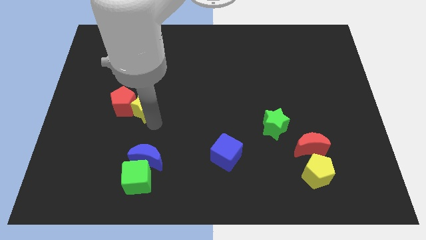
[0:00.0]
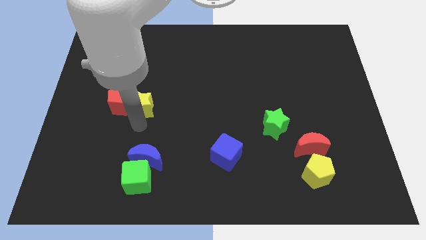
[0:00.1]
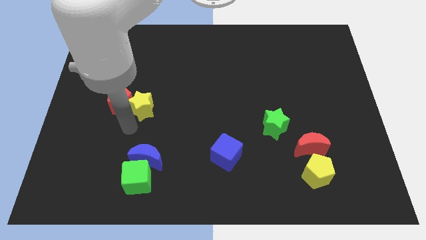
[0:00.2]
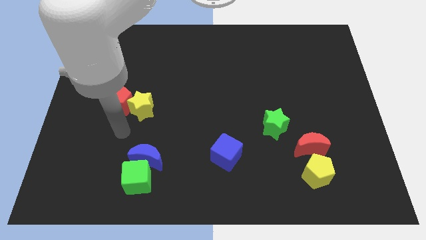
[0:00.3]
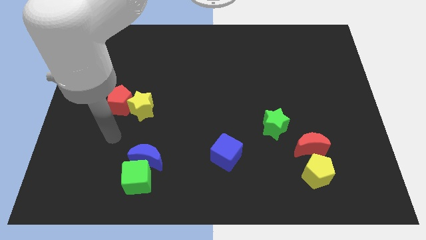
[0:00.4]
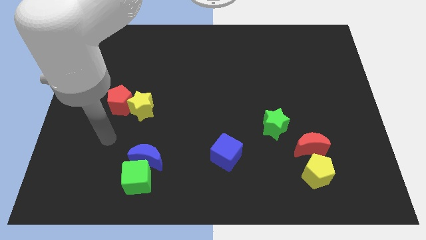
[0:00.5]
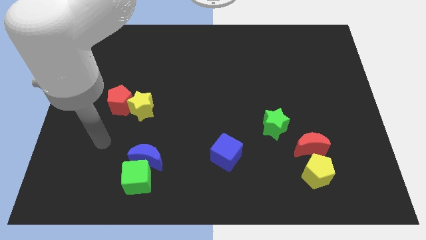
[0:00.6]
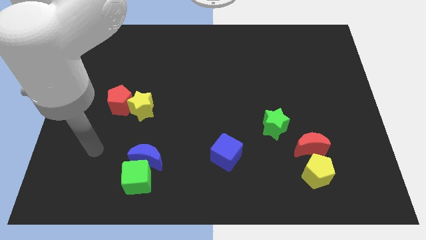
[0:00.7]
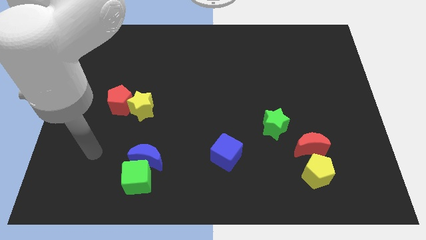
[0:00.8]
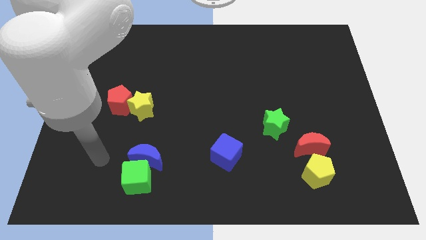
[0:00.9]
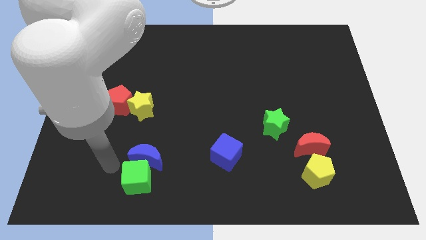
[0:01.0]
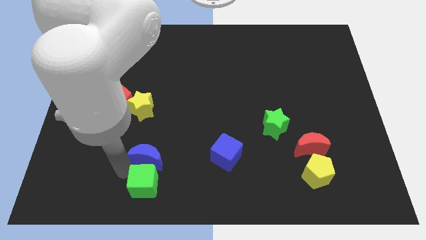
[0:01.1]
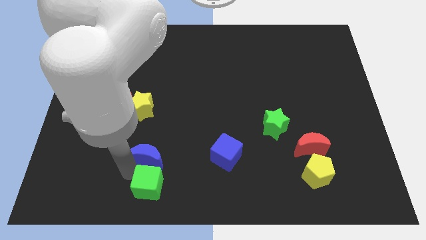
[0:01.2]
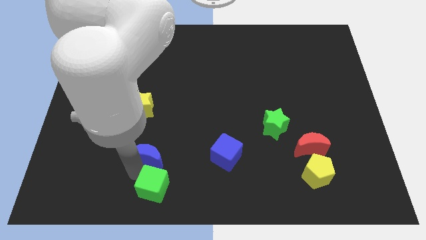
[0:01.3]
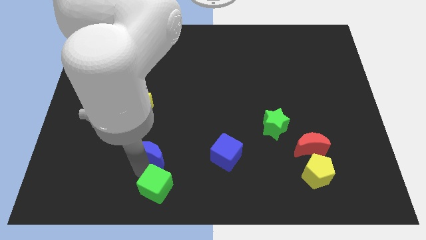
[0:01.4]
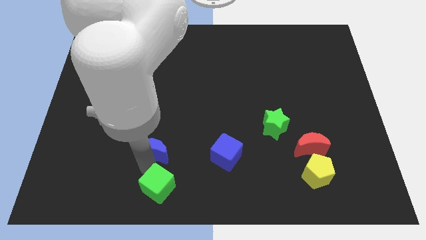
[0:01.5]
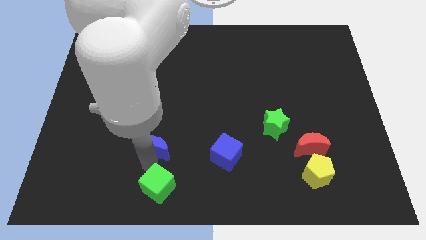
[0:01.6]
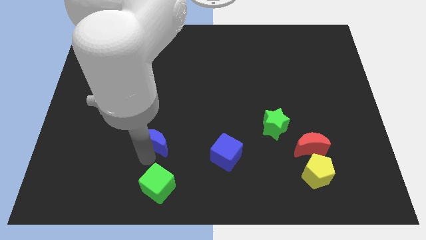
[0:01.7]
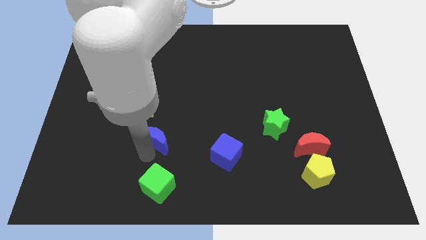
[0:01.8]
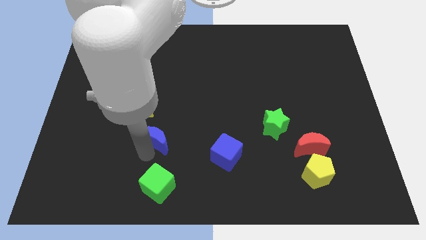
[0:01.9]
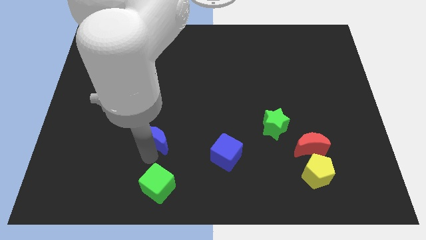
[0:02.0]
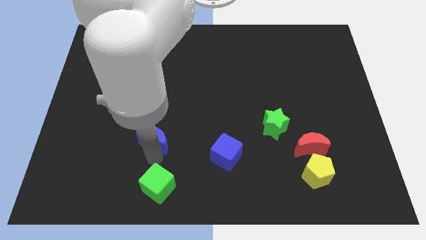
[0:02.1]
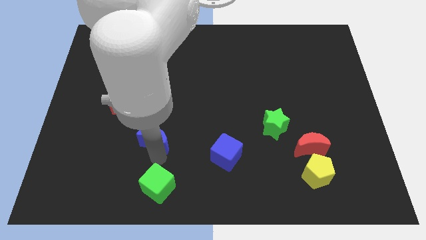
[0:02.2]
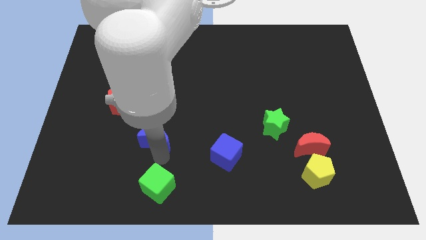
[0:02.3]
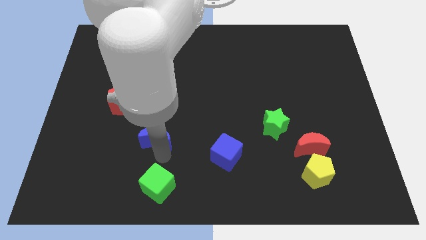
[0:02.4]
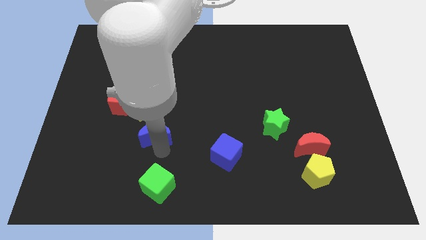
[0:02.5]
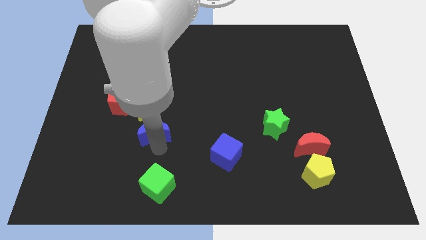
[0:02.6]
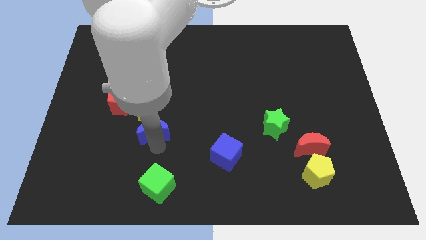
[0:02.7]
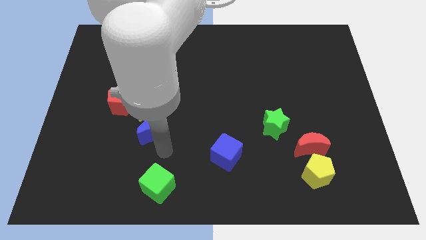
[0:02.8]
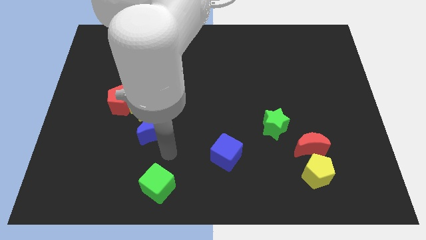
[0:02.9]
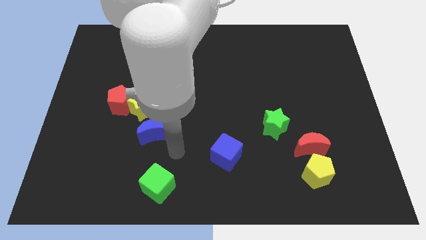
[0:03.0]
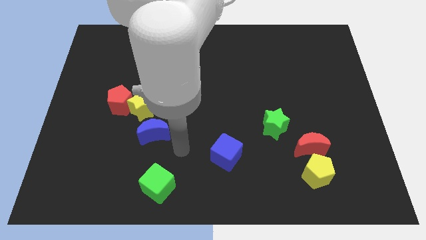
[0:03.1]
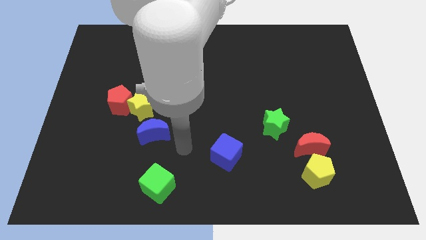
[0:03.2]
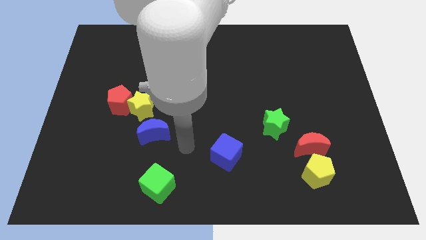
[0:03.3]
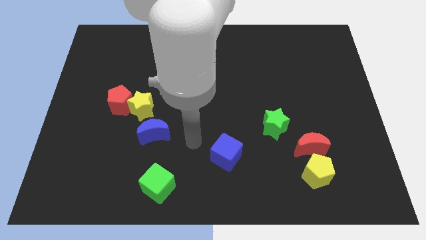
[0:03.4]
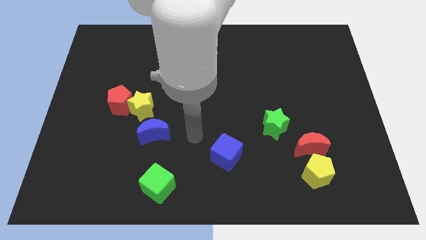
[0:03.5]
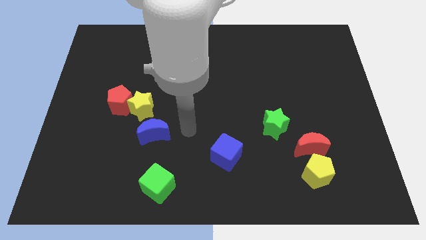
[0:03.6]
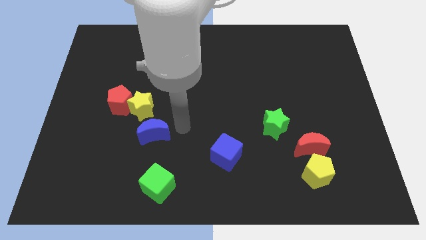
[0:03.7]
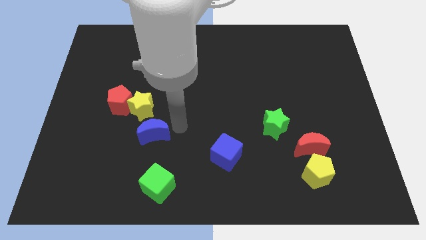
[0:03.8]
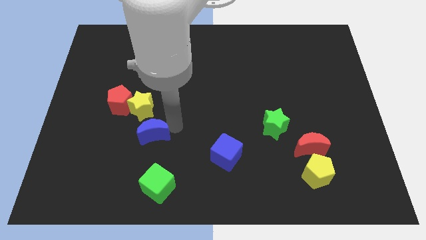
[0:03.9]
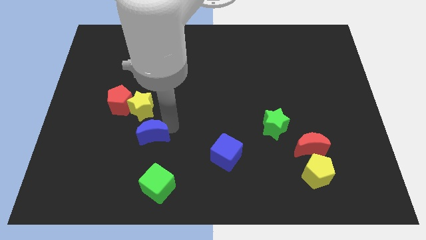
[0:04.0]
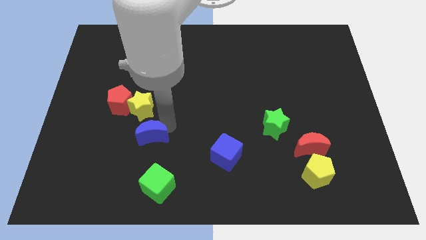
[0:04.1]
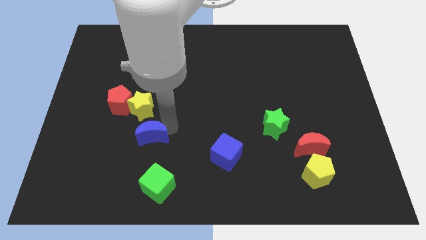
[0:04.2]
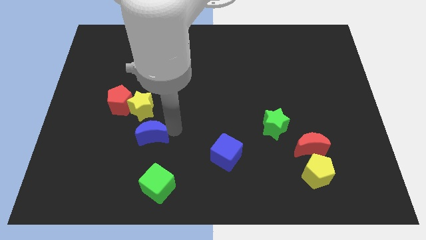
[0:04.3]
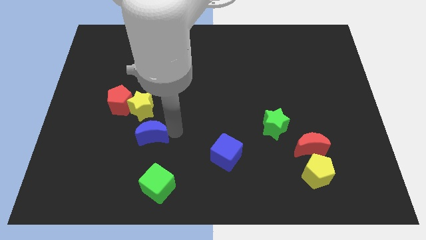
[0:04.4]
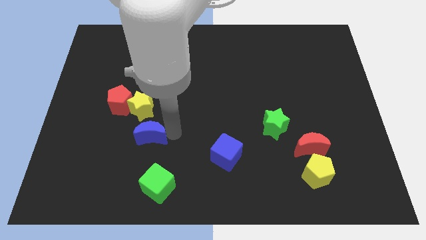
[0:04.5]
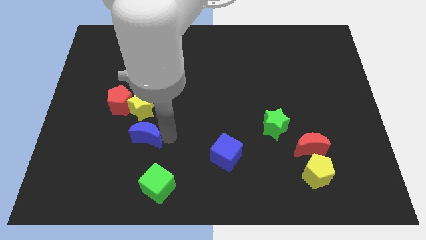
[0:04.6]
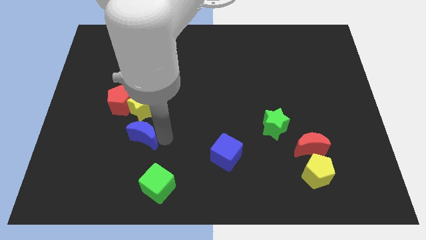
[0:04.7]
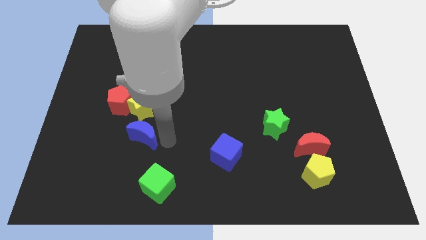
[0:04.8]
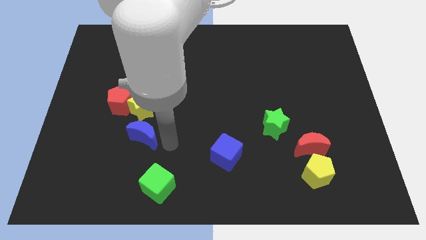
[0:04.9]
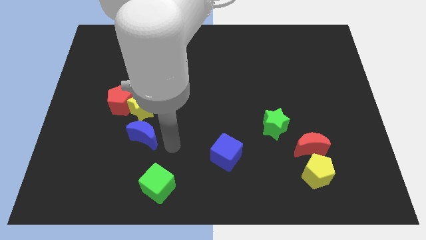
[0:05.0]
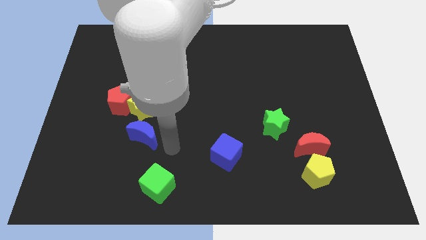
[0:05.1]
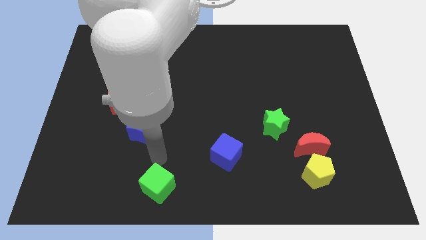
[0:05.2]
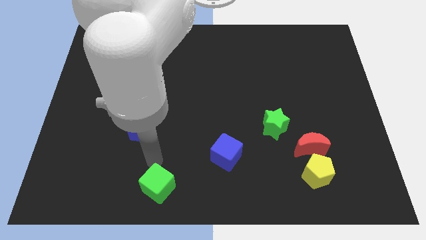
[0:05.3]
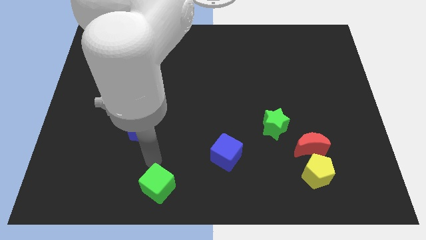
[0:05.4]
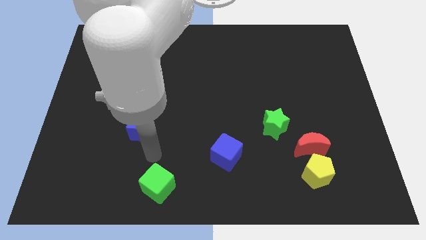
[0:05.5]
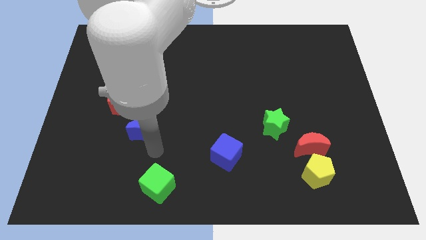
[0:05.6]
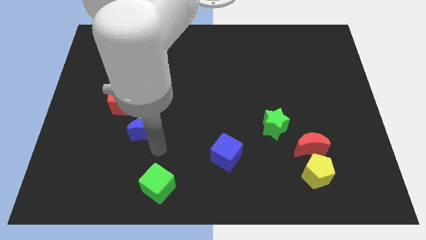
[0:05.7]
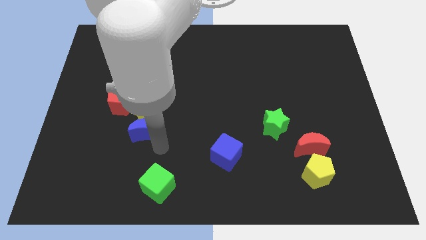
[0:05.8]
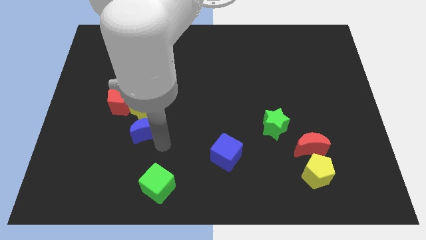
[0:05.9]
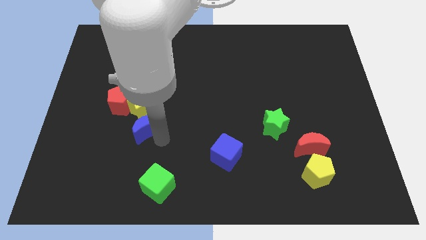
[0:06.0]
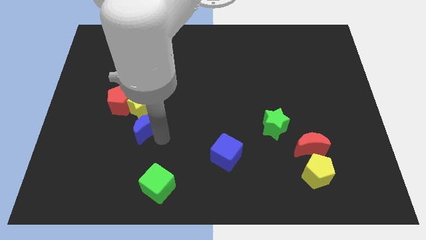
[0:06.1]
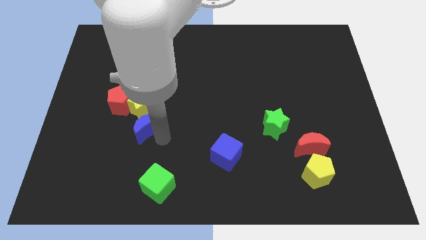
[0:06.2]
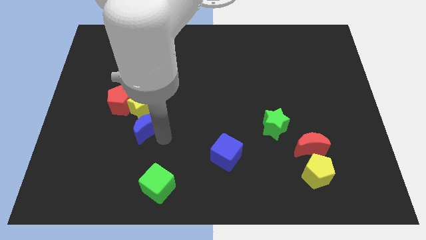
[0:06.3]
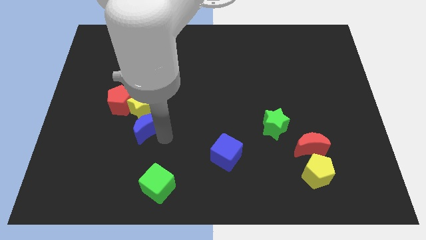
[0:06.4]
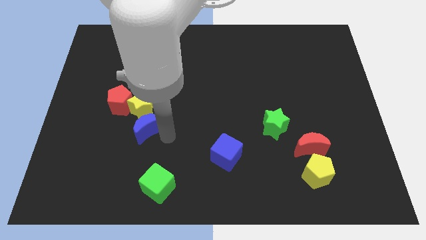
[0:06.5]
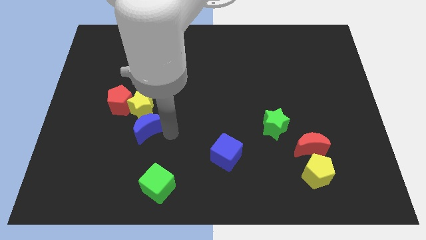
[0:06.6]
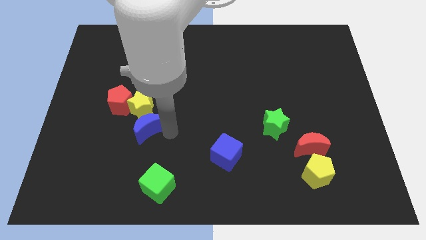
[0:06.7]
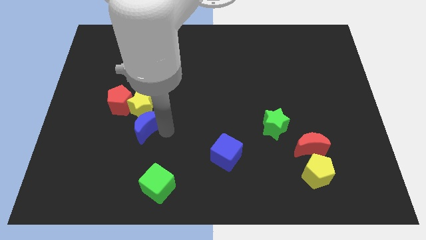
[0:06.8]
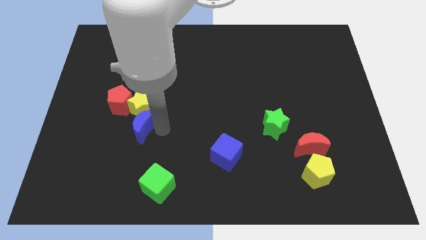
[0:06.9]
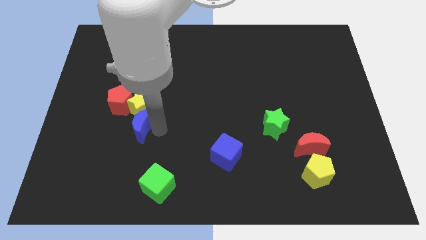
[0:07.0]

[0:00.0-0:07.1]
move blue moon to the bottom of the yellow star

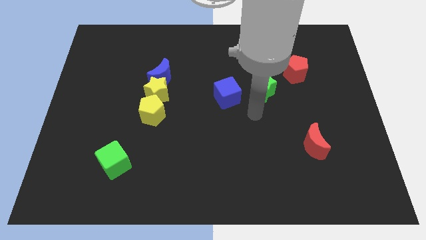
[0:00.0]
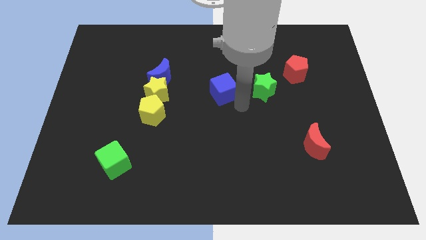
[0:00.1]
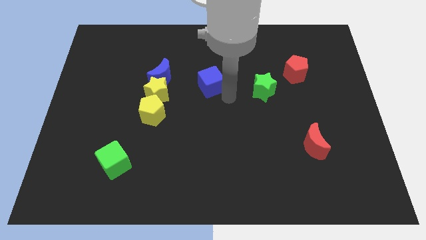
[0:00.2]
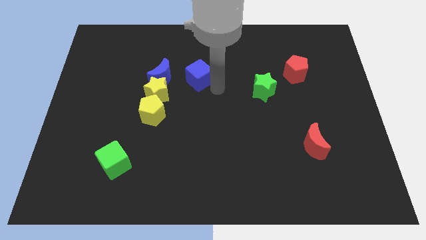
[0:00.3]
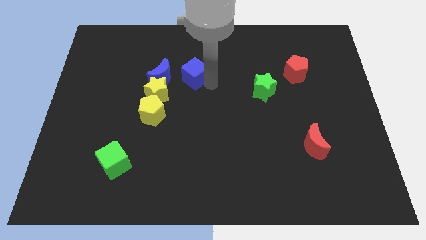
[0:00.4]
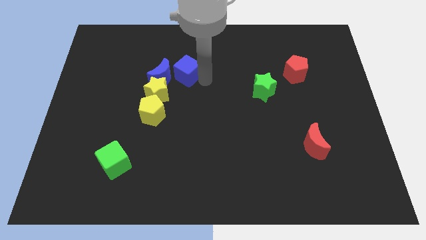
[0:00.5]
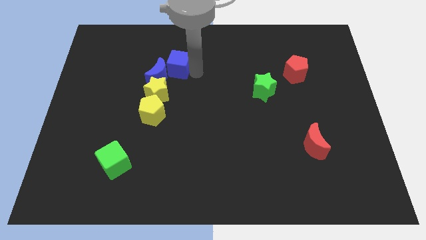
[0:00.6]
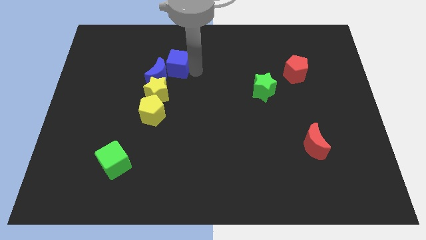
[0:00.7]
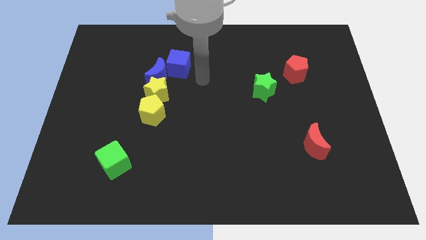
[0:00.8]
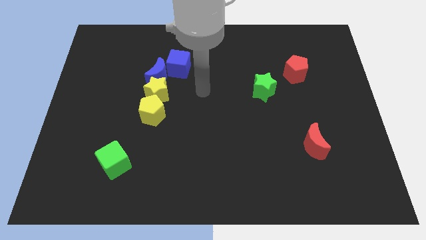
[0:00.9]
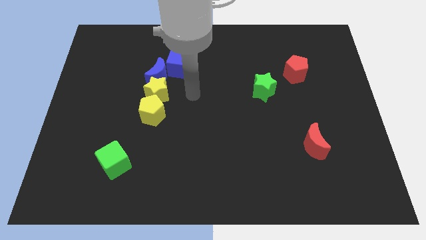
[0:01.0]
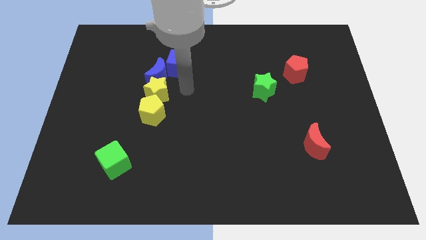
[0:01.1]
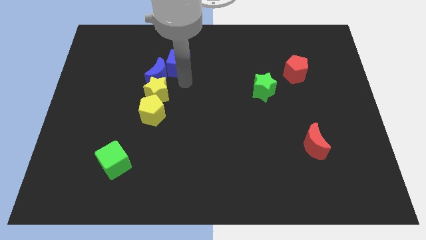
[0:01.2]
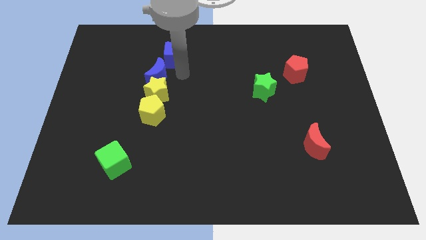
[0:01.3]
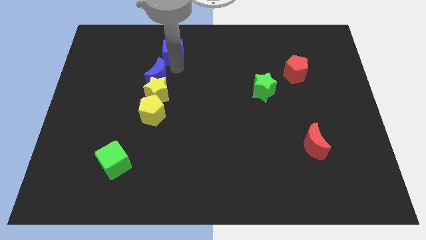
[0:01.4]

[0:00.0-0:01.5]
place blue cube above the blue moon

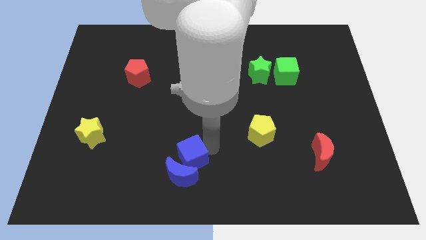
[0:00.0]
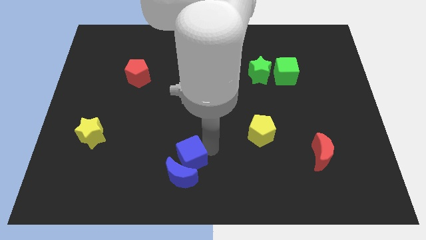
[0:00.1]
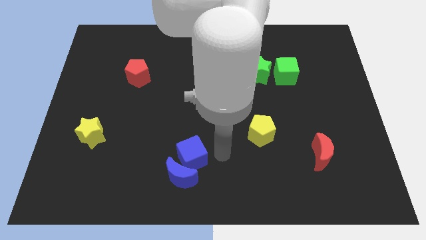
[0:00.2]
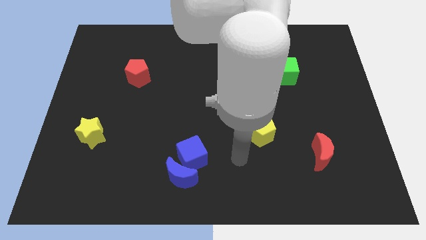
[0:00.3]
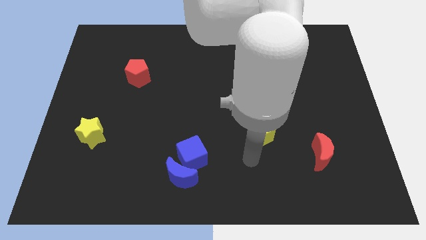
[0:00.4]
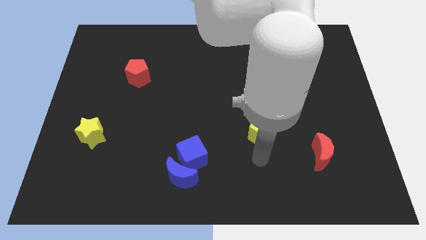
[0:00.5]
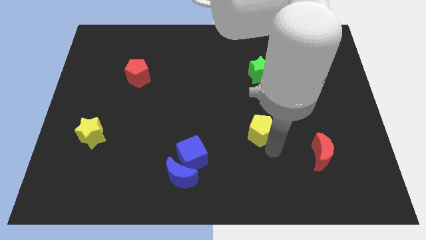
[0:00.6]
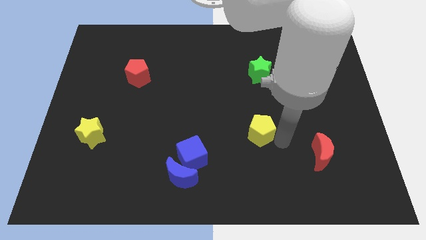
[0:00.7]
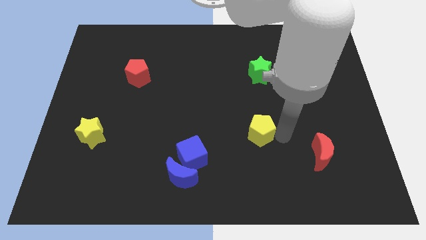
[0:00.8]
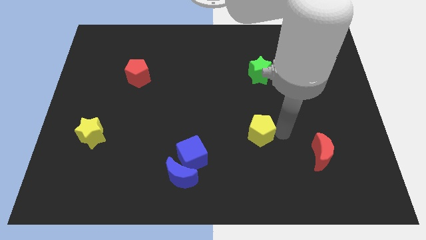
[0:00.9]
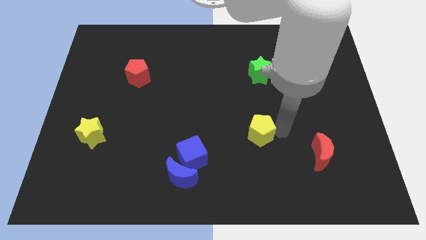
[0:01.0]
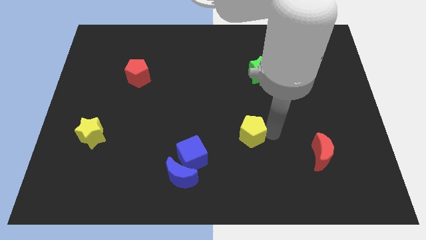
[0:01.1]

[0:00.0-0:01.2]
move your arm to the right of yellow pentagon
